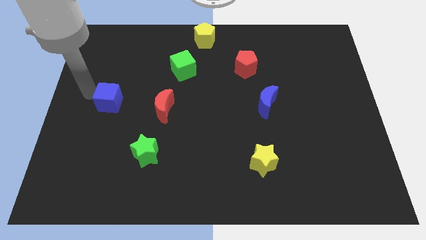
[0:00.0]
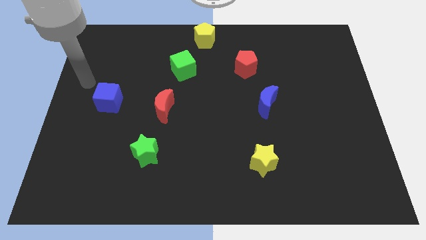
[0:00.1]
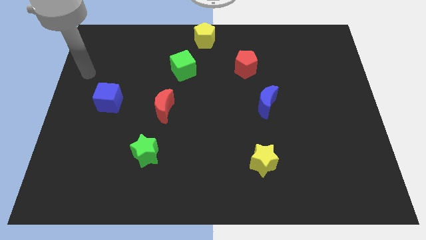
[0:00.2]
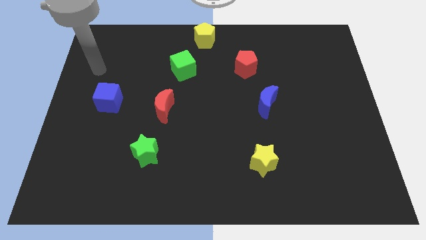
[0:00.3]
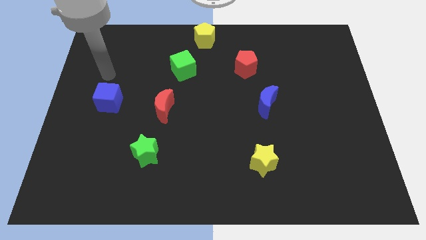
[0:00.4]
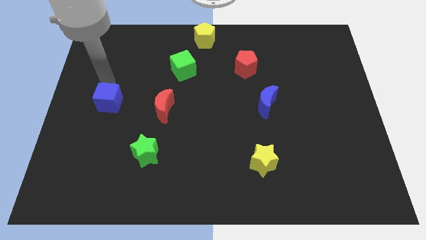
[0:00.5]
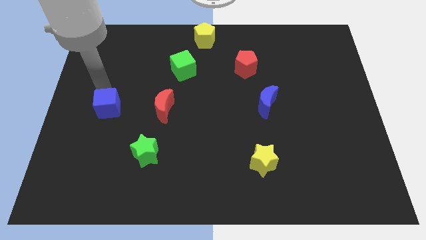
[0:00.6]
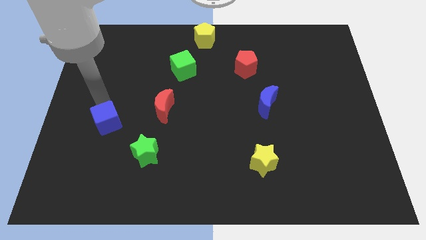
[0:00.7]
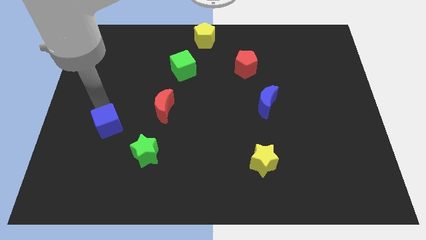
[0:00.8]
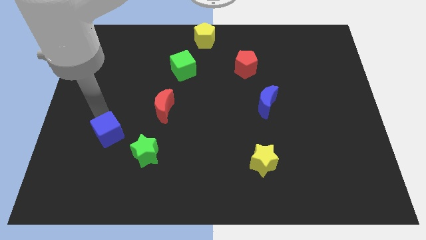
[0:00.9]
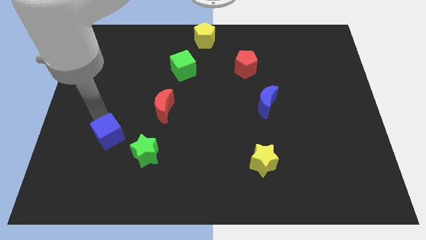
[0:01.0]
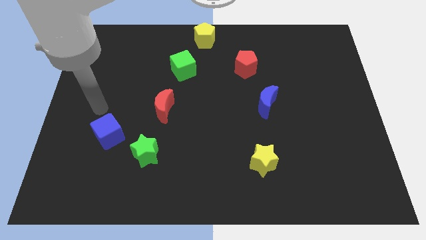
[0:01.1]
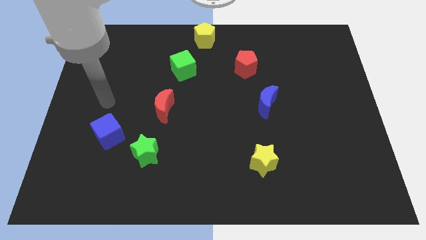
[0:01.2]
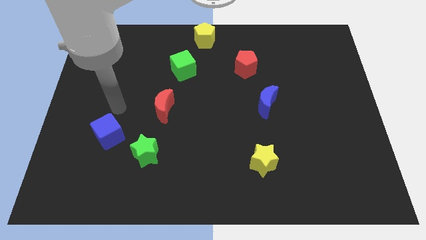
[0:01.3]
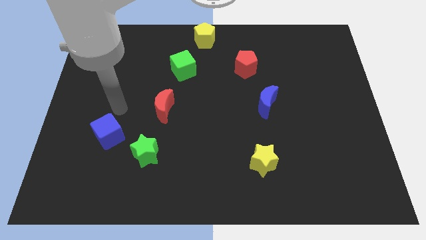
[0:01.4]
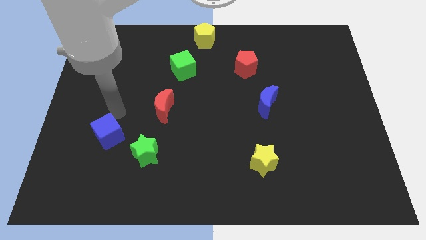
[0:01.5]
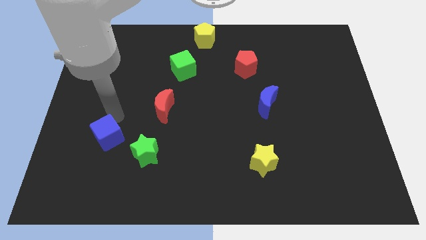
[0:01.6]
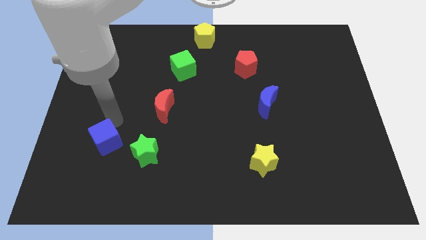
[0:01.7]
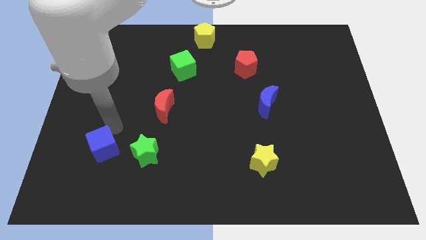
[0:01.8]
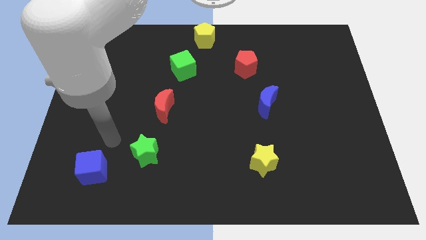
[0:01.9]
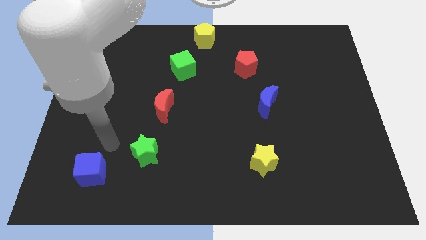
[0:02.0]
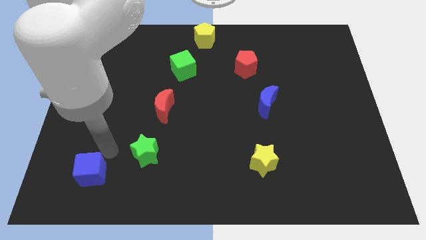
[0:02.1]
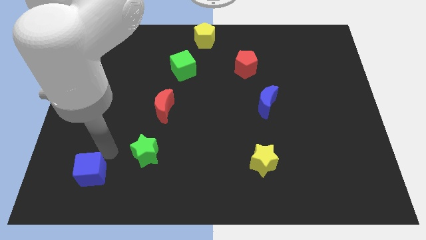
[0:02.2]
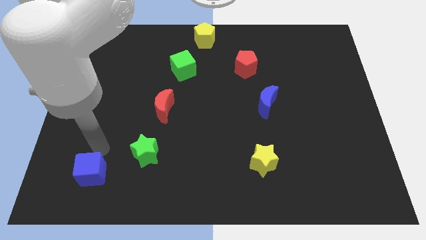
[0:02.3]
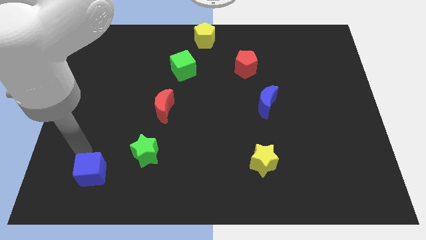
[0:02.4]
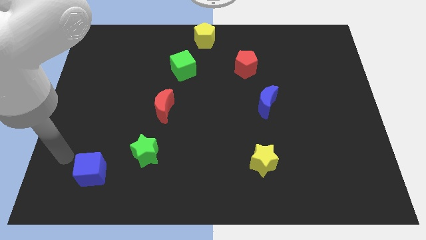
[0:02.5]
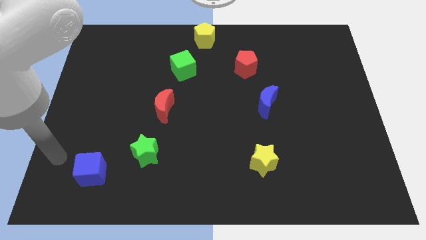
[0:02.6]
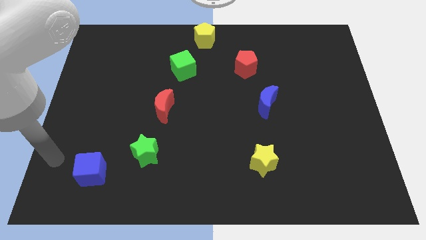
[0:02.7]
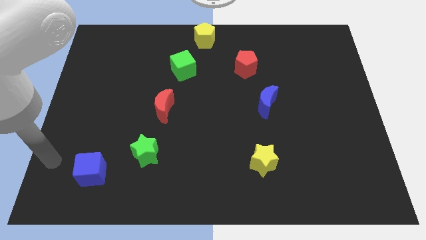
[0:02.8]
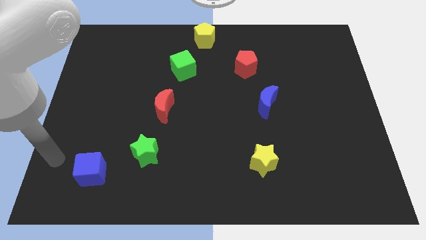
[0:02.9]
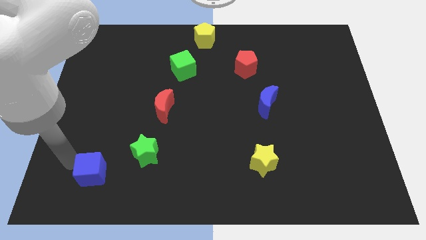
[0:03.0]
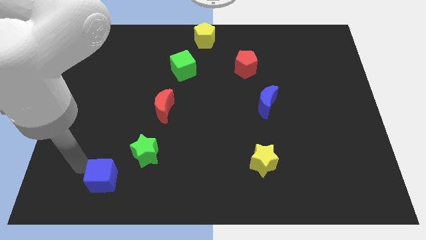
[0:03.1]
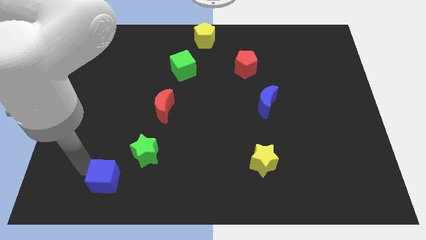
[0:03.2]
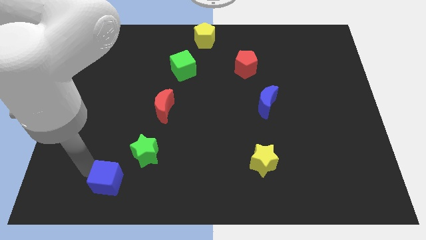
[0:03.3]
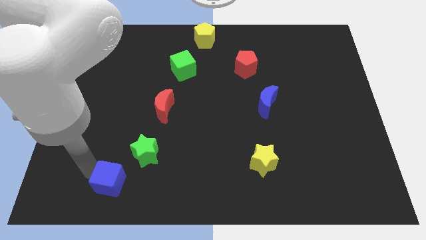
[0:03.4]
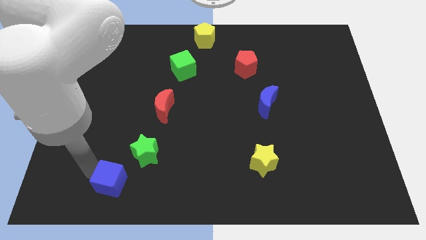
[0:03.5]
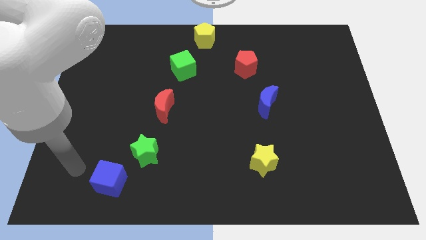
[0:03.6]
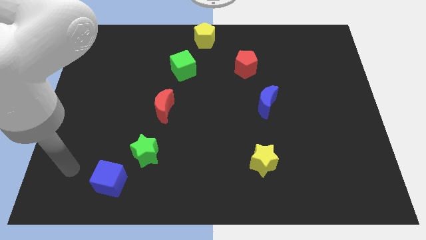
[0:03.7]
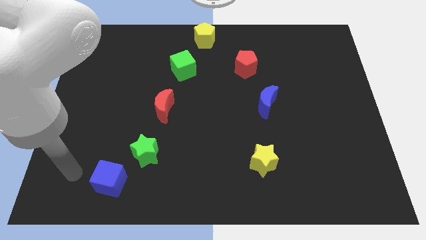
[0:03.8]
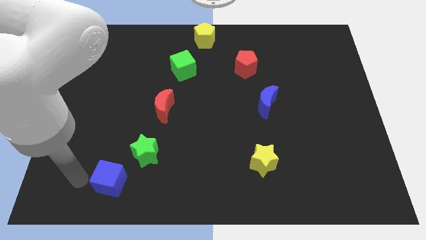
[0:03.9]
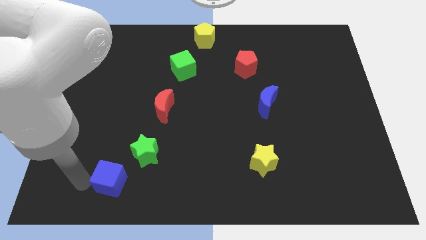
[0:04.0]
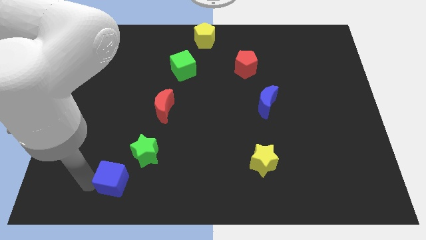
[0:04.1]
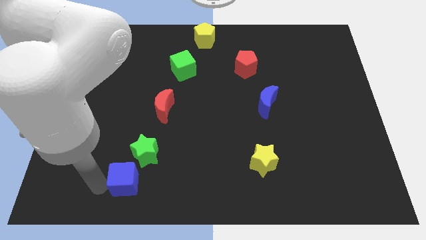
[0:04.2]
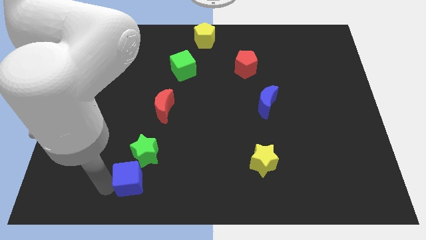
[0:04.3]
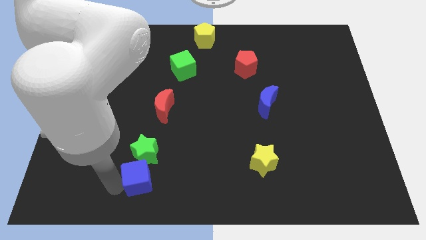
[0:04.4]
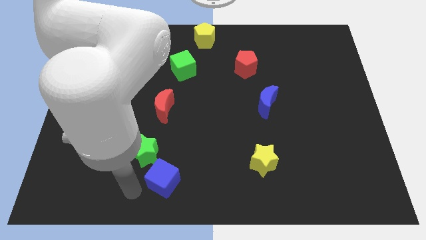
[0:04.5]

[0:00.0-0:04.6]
place the blue cube below the green star

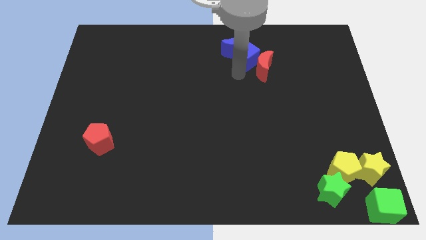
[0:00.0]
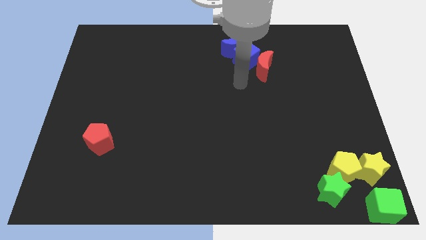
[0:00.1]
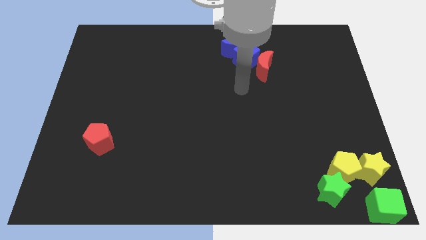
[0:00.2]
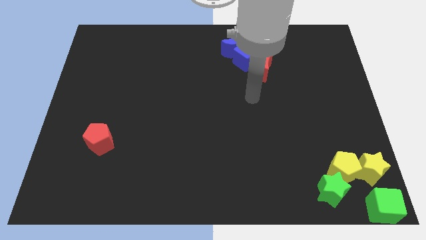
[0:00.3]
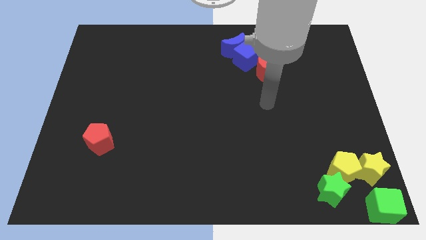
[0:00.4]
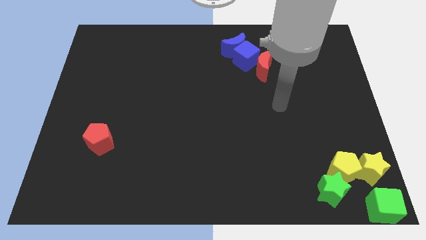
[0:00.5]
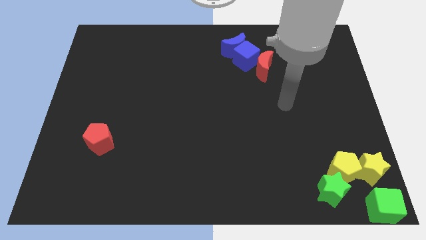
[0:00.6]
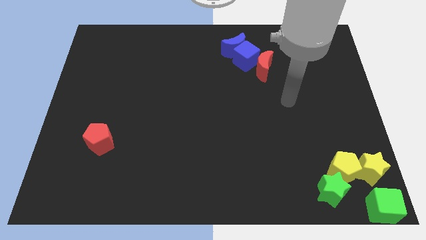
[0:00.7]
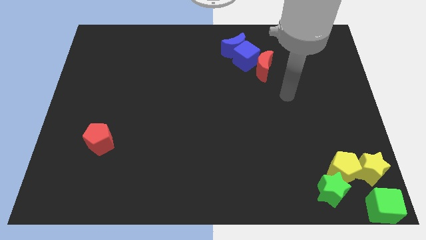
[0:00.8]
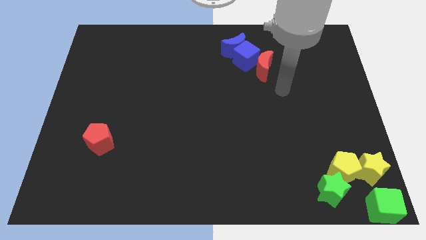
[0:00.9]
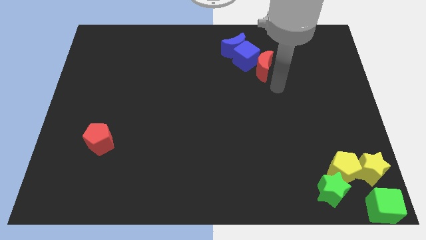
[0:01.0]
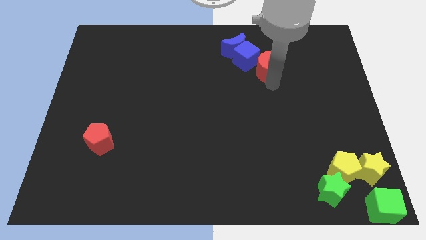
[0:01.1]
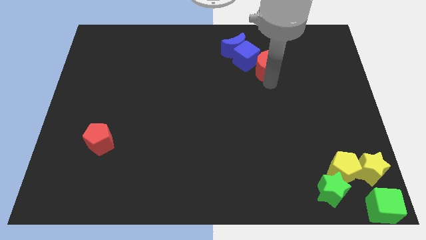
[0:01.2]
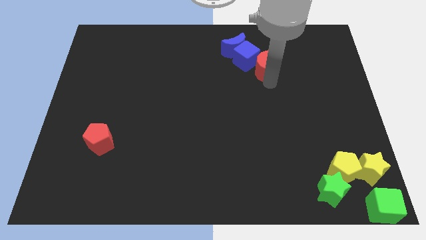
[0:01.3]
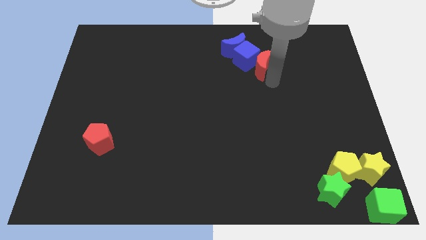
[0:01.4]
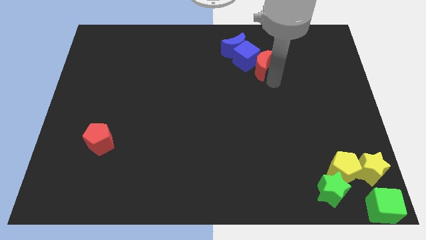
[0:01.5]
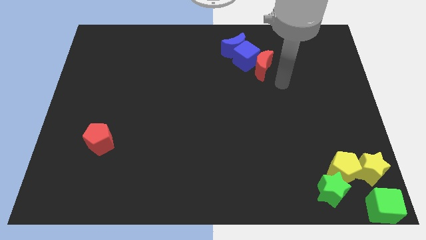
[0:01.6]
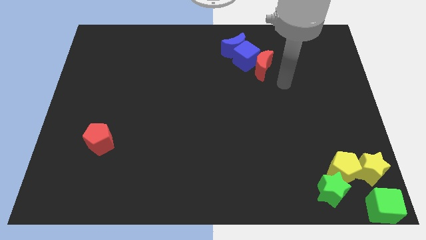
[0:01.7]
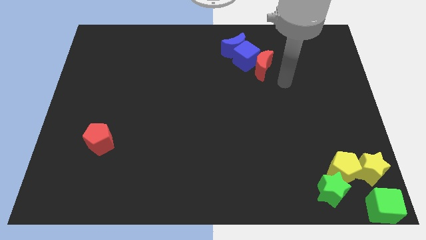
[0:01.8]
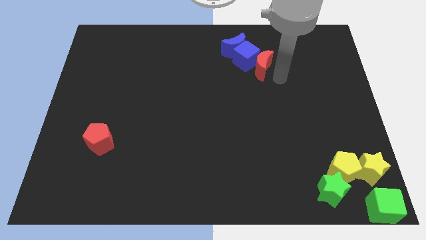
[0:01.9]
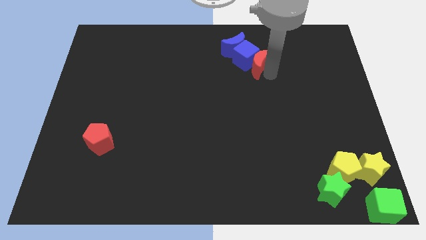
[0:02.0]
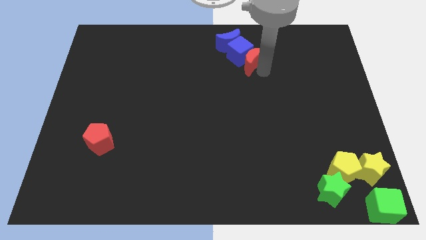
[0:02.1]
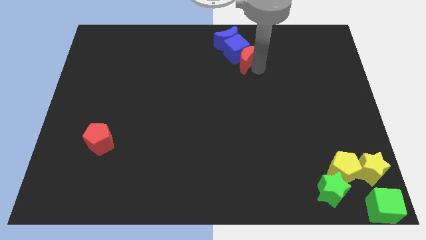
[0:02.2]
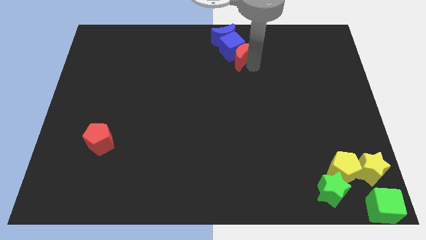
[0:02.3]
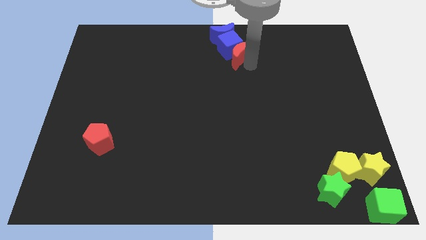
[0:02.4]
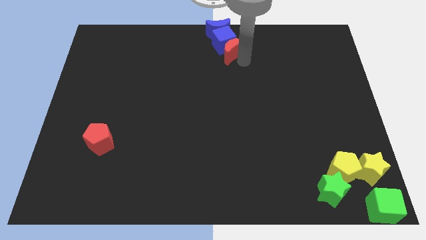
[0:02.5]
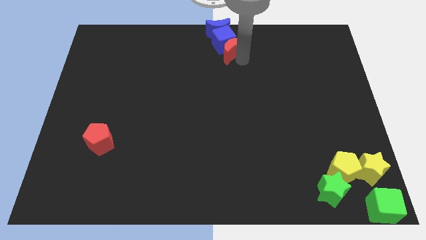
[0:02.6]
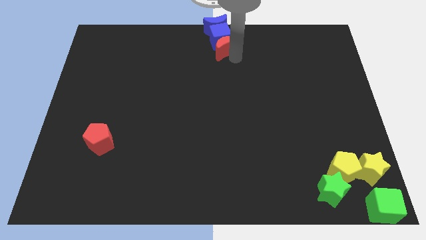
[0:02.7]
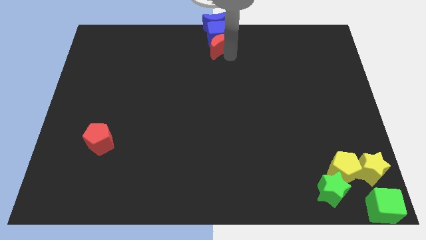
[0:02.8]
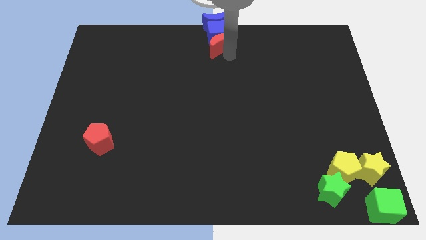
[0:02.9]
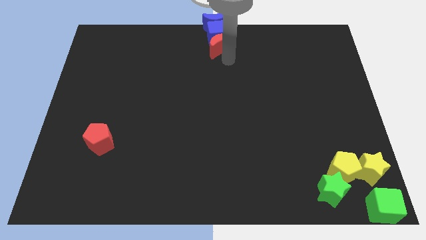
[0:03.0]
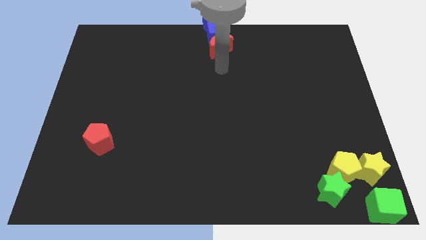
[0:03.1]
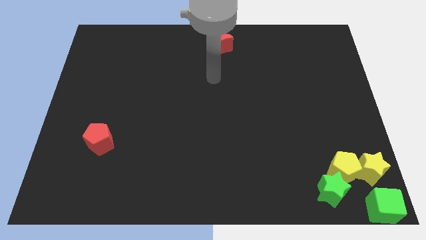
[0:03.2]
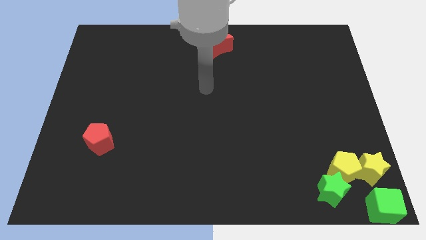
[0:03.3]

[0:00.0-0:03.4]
push red moon along with blue moon and blue cube to the top center of the board

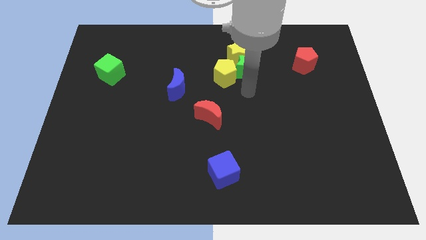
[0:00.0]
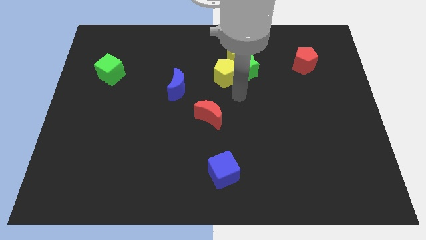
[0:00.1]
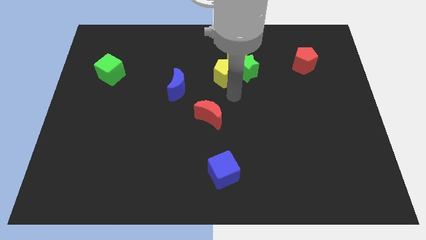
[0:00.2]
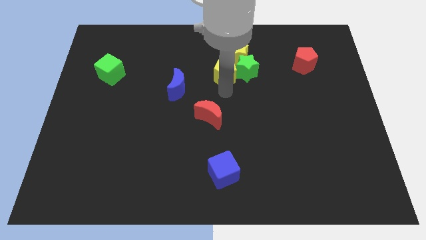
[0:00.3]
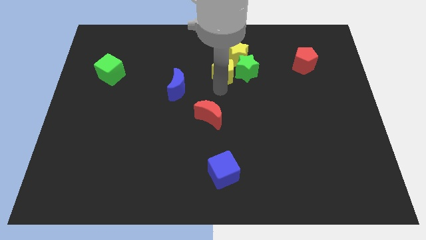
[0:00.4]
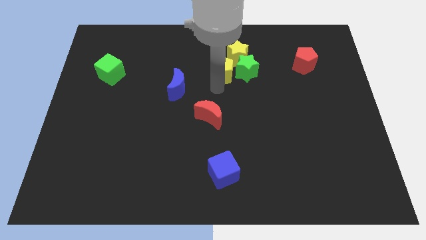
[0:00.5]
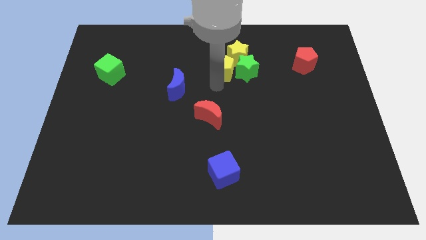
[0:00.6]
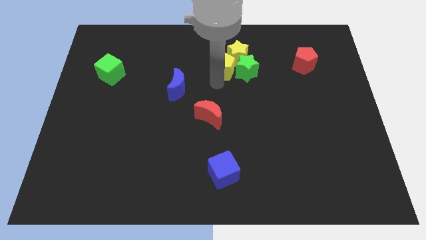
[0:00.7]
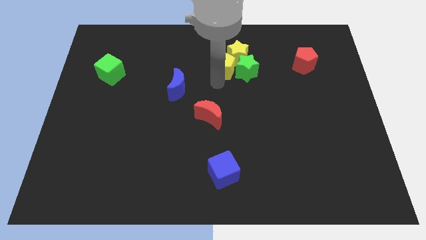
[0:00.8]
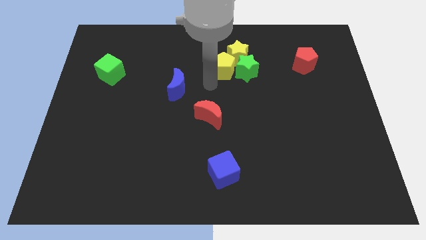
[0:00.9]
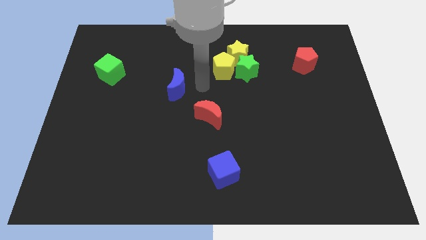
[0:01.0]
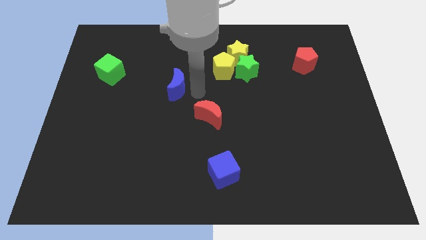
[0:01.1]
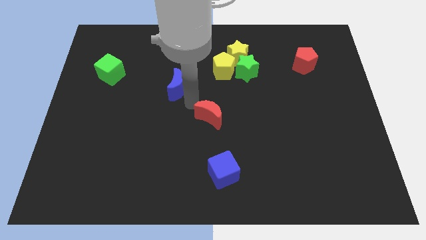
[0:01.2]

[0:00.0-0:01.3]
slightly push the yellow pentagon to the left of the green star
